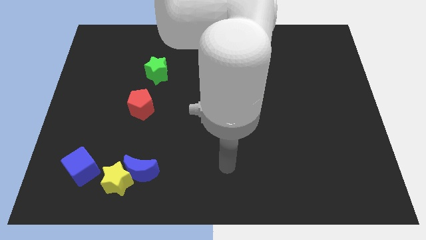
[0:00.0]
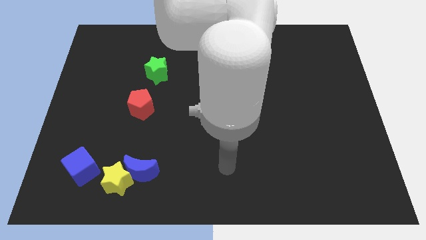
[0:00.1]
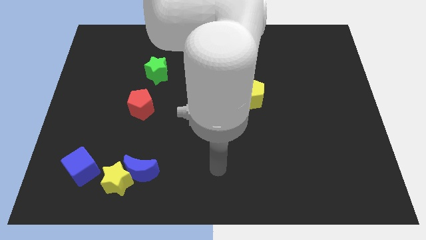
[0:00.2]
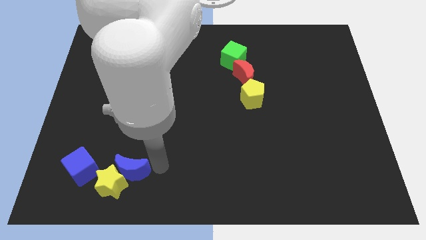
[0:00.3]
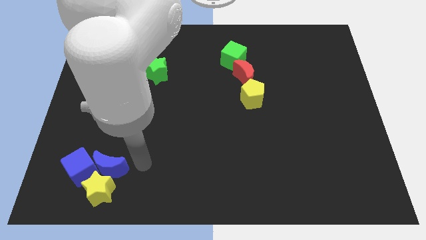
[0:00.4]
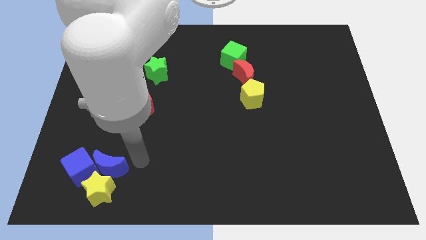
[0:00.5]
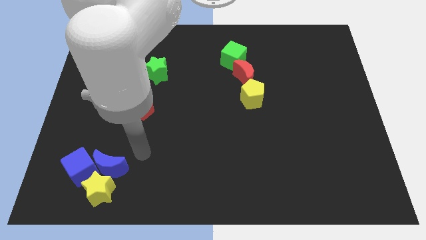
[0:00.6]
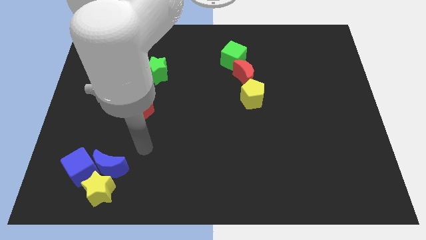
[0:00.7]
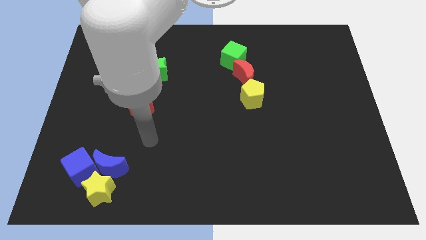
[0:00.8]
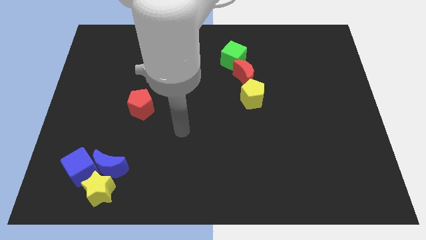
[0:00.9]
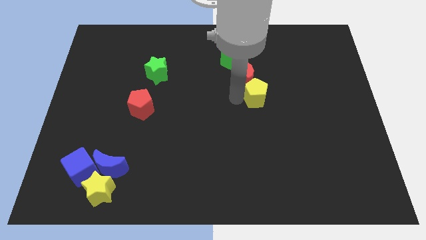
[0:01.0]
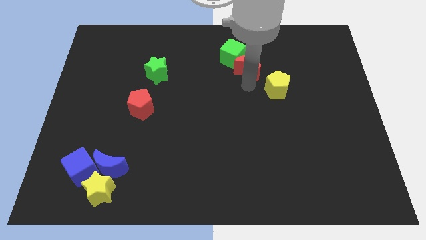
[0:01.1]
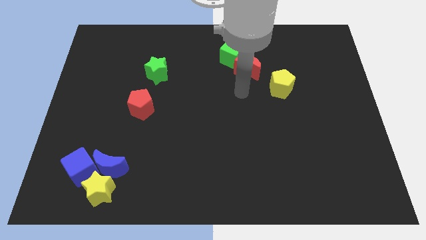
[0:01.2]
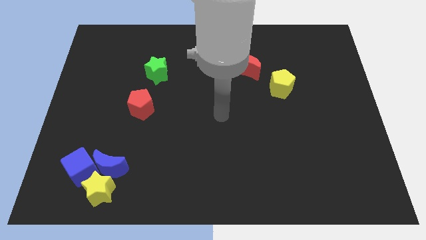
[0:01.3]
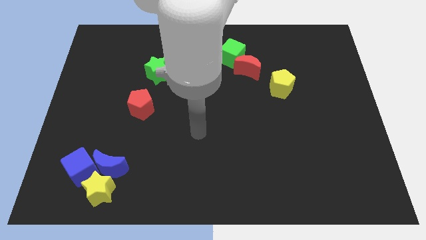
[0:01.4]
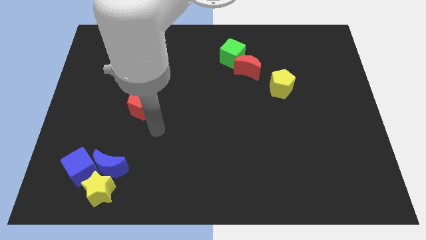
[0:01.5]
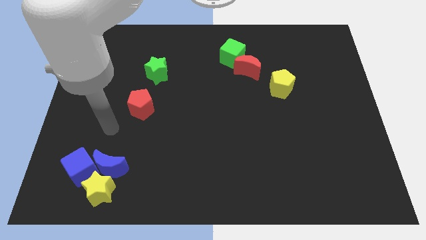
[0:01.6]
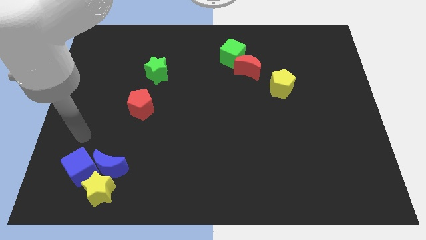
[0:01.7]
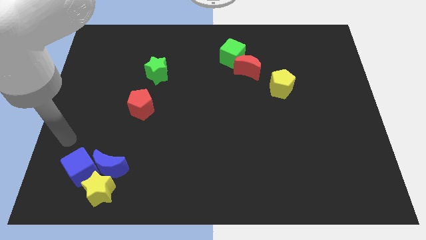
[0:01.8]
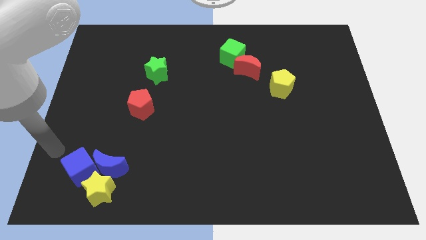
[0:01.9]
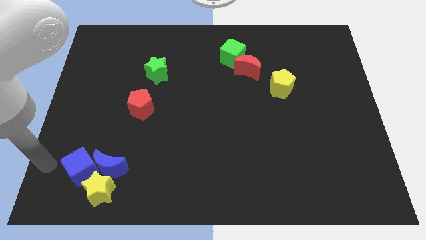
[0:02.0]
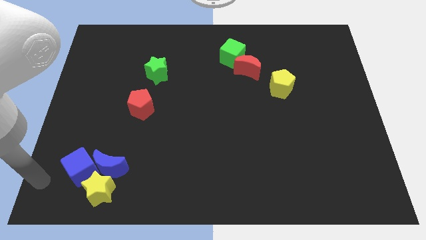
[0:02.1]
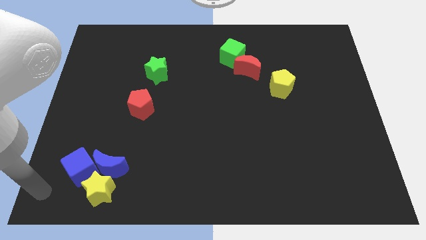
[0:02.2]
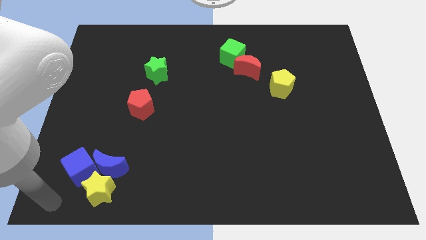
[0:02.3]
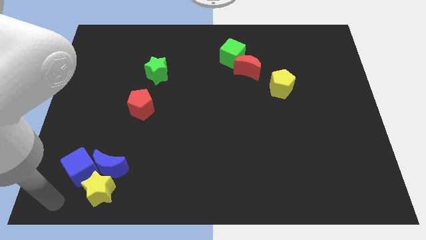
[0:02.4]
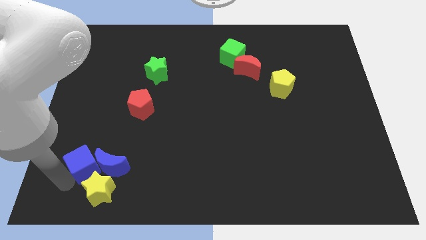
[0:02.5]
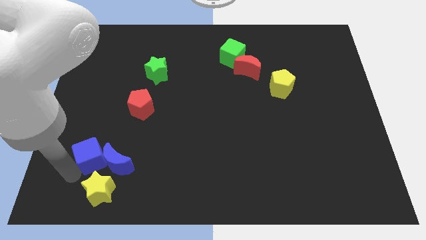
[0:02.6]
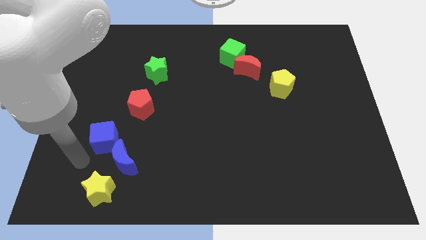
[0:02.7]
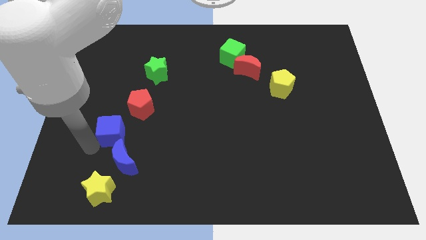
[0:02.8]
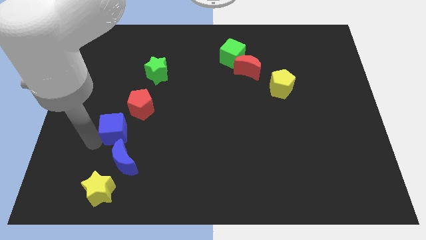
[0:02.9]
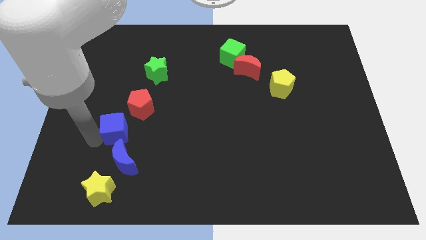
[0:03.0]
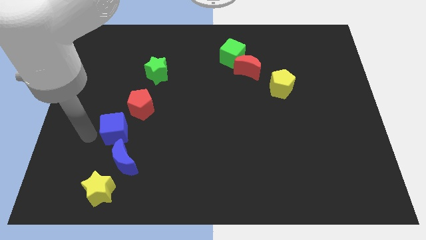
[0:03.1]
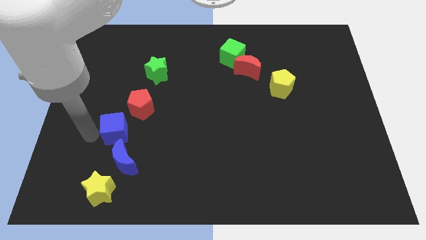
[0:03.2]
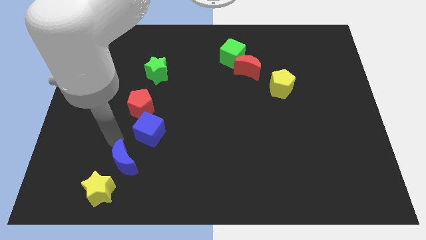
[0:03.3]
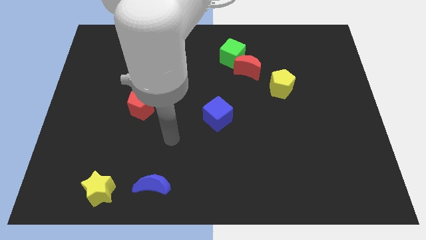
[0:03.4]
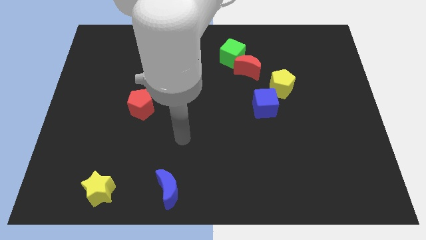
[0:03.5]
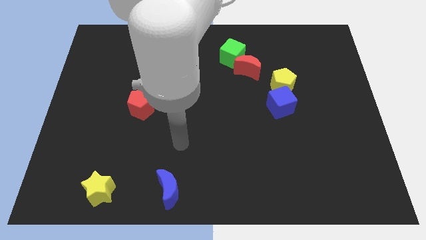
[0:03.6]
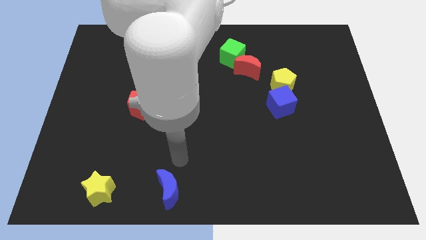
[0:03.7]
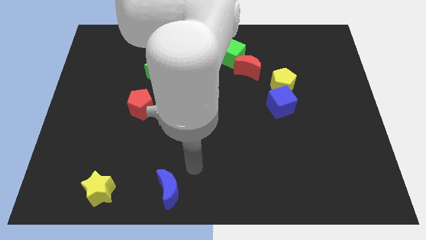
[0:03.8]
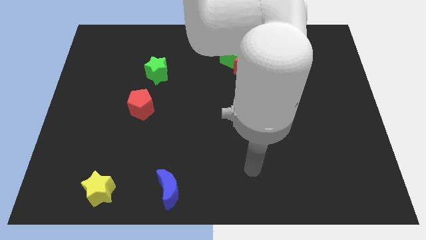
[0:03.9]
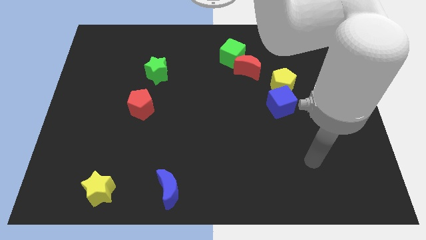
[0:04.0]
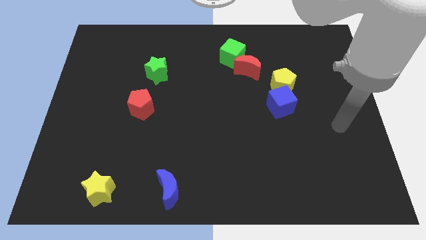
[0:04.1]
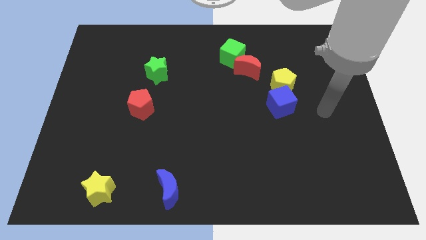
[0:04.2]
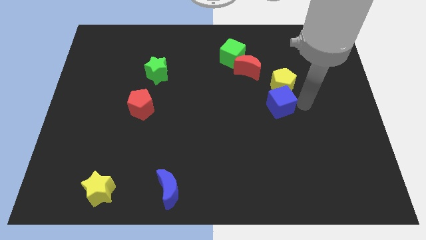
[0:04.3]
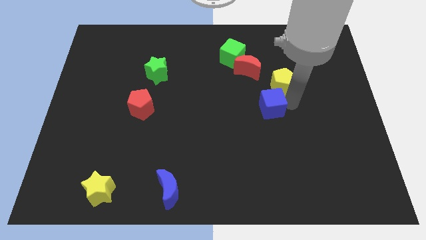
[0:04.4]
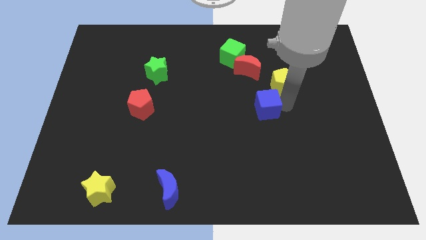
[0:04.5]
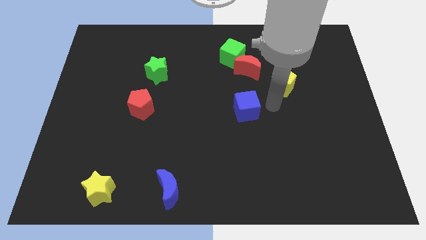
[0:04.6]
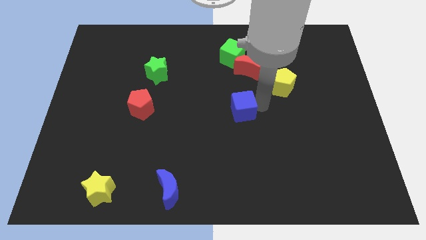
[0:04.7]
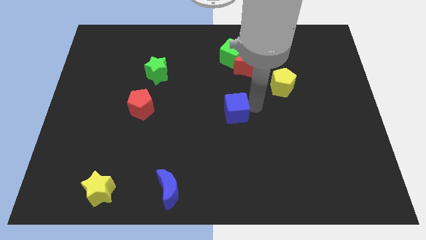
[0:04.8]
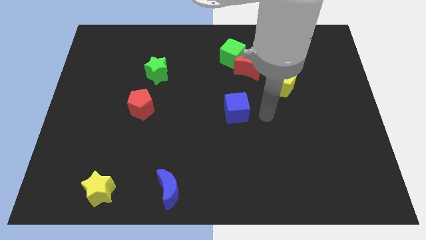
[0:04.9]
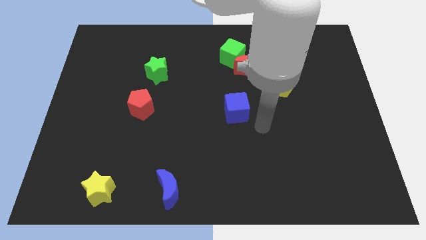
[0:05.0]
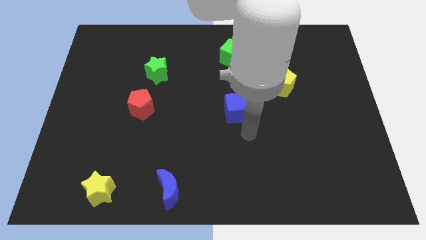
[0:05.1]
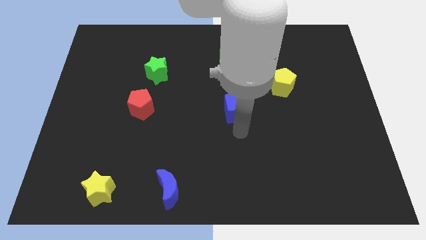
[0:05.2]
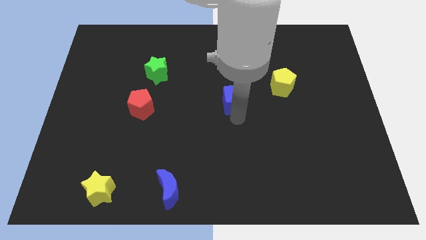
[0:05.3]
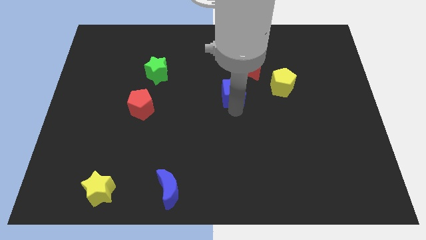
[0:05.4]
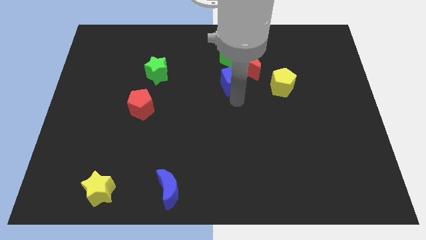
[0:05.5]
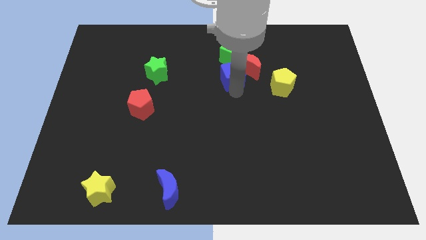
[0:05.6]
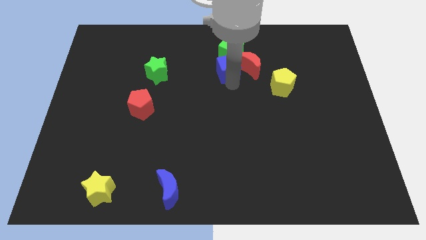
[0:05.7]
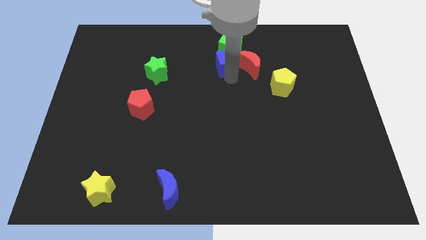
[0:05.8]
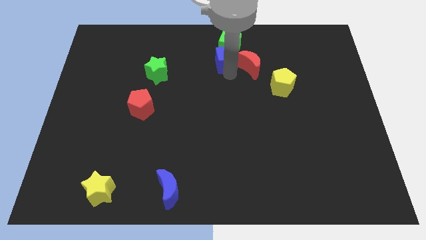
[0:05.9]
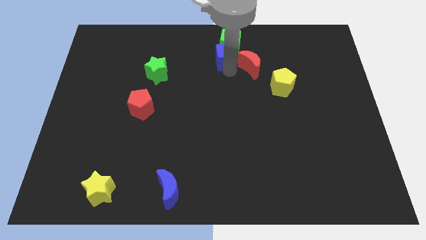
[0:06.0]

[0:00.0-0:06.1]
slide the blue cube close to the green cube

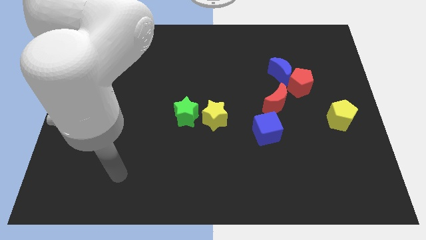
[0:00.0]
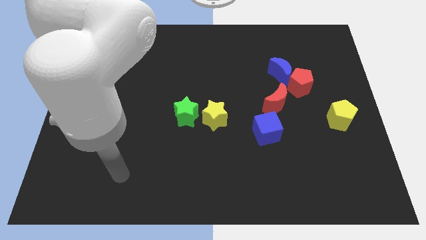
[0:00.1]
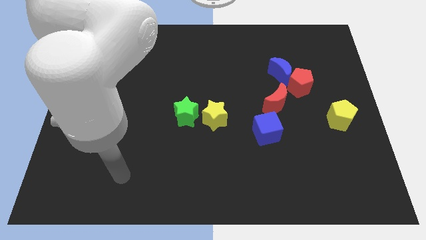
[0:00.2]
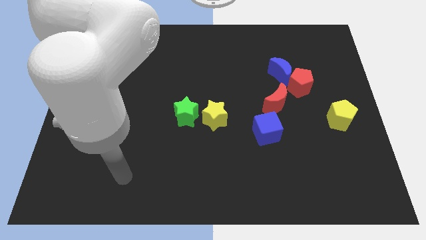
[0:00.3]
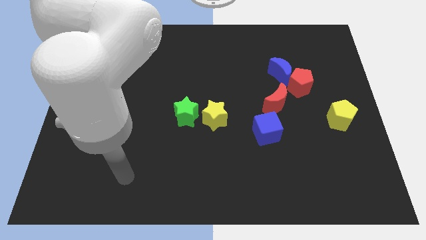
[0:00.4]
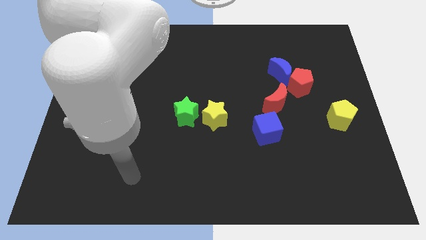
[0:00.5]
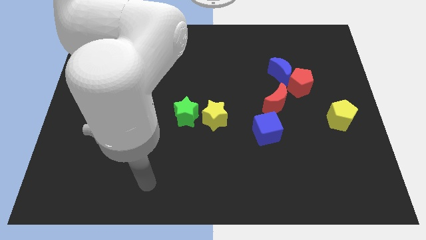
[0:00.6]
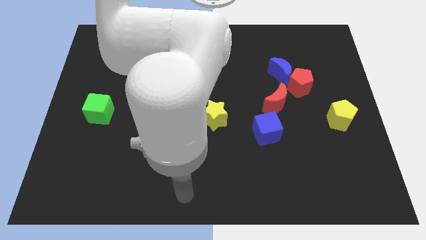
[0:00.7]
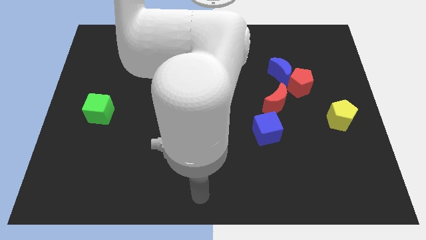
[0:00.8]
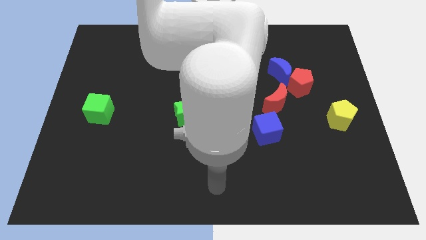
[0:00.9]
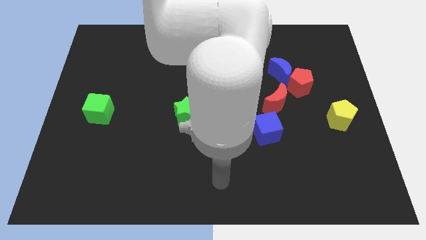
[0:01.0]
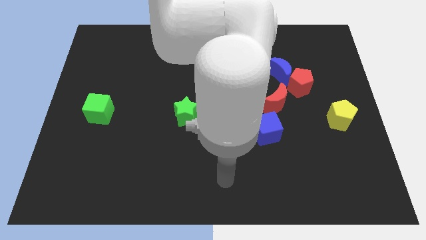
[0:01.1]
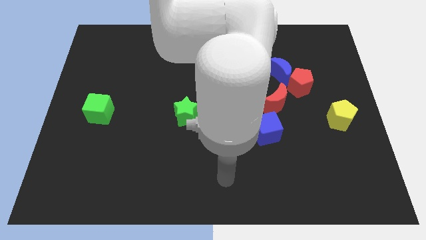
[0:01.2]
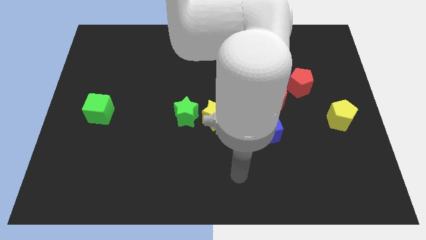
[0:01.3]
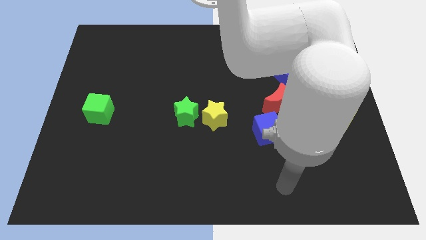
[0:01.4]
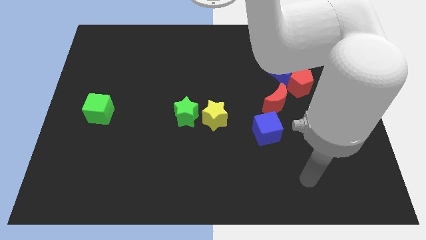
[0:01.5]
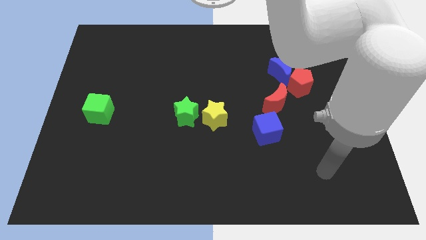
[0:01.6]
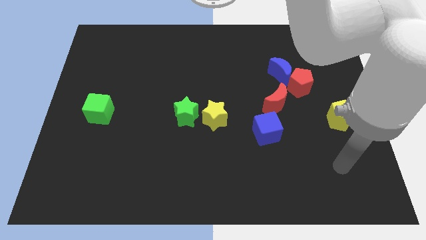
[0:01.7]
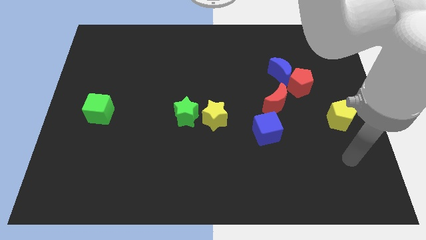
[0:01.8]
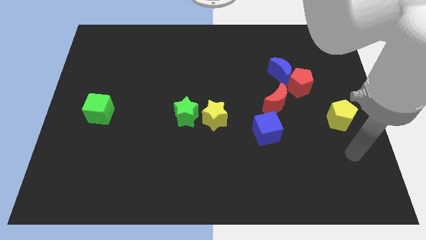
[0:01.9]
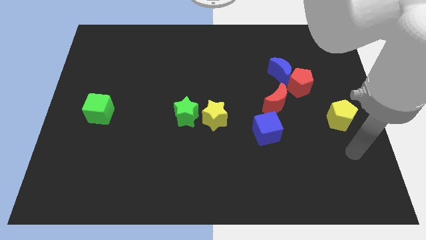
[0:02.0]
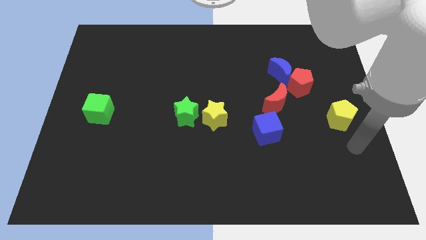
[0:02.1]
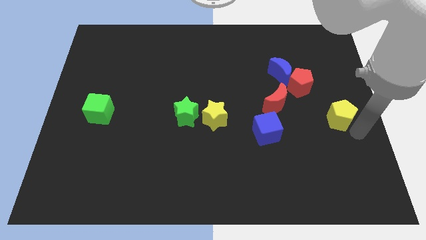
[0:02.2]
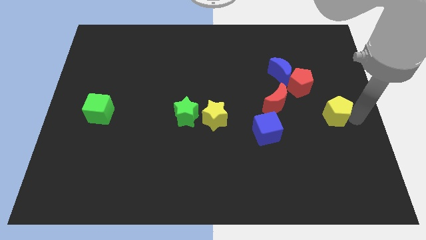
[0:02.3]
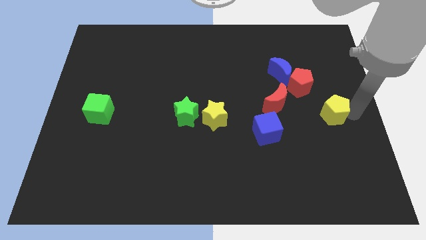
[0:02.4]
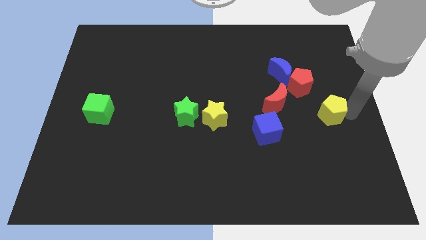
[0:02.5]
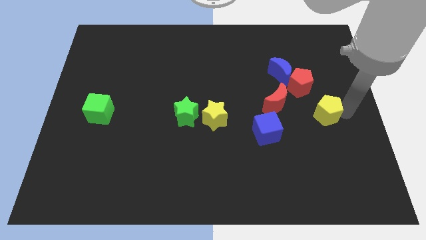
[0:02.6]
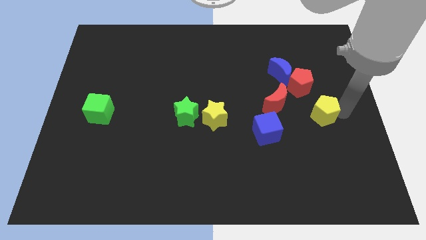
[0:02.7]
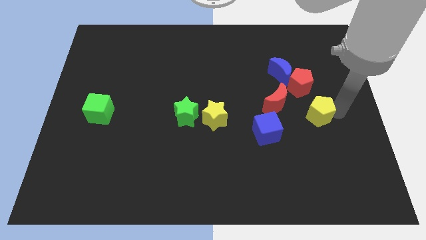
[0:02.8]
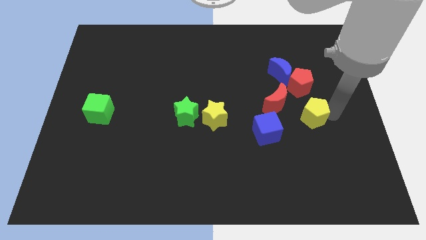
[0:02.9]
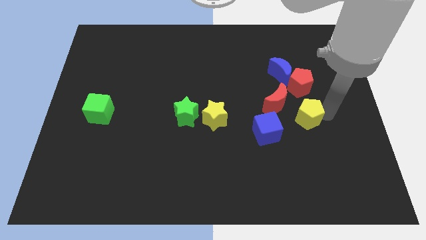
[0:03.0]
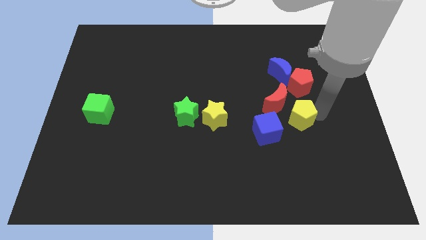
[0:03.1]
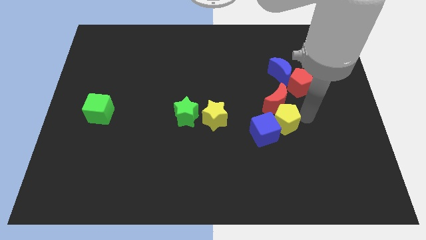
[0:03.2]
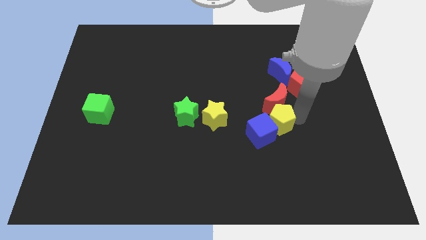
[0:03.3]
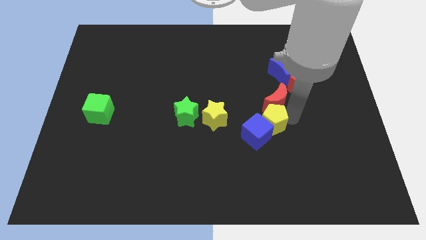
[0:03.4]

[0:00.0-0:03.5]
move the yellow pentagon close to the blue cube
